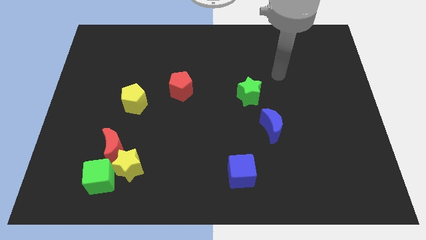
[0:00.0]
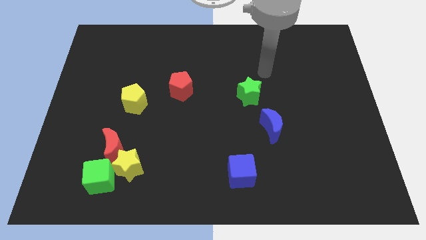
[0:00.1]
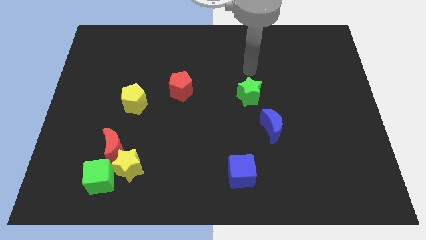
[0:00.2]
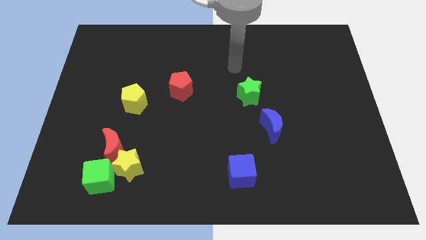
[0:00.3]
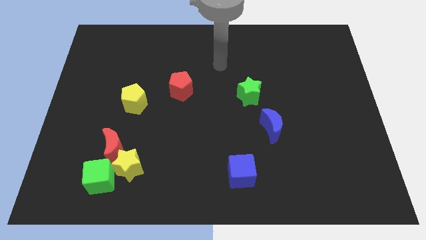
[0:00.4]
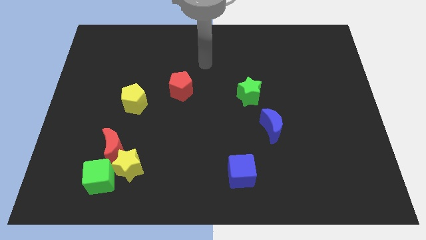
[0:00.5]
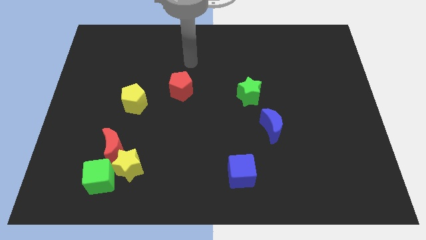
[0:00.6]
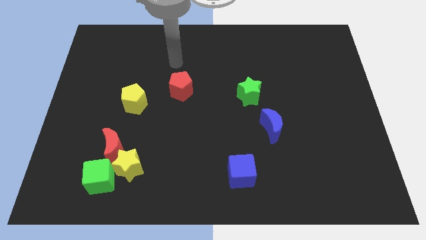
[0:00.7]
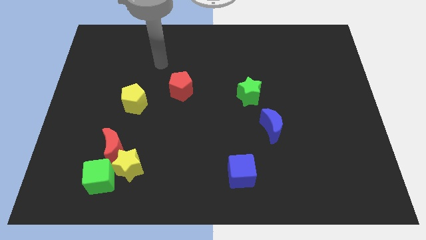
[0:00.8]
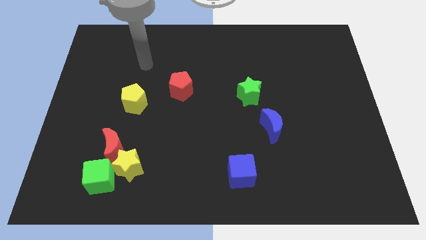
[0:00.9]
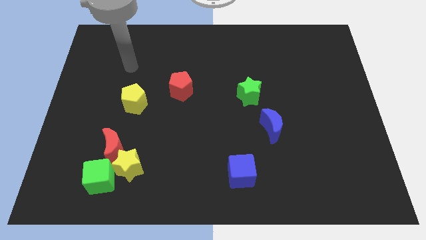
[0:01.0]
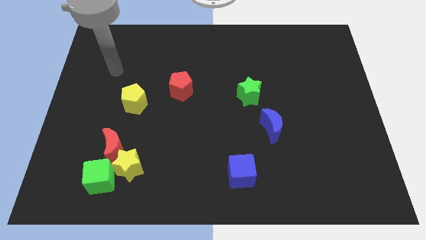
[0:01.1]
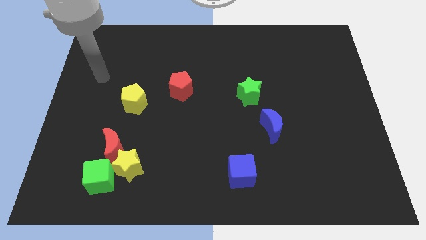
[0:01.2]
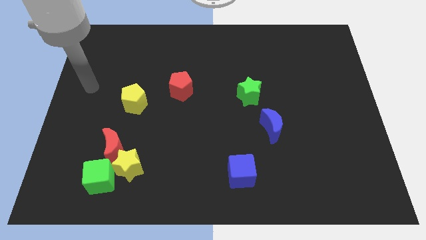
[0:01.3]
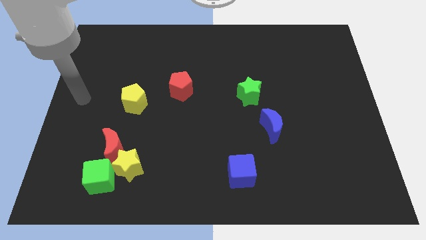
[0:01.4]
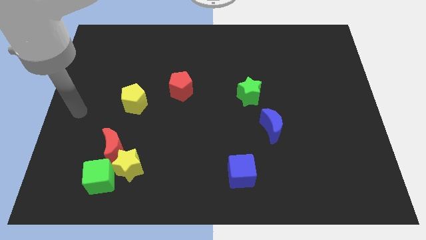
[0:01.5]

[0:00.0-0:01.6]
move the arm to the left of yellow pentagon

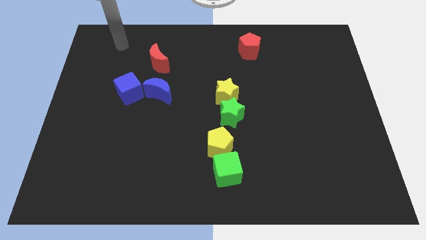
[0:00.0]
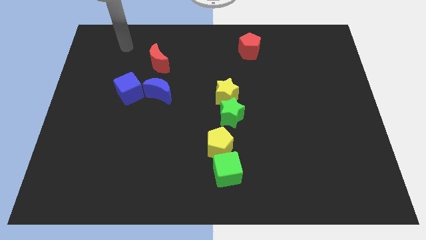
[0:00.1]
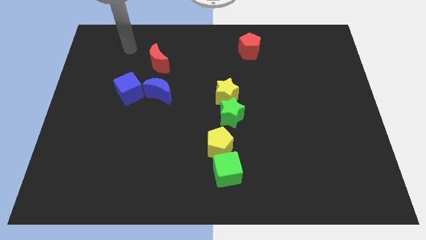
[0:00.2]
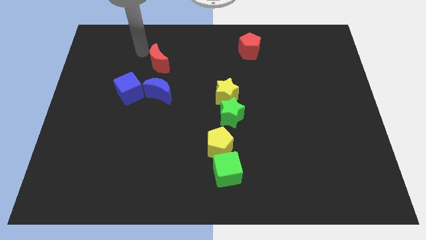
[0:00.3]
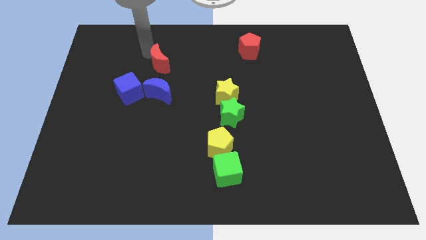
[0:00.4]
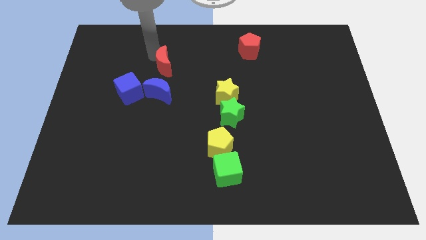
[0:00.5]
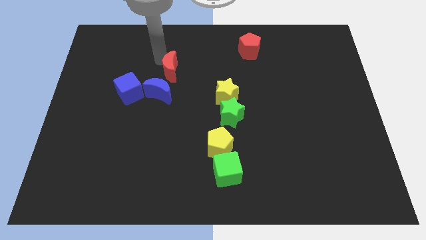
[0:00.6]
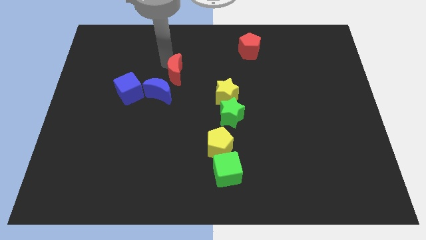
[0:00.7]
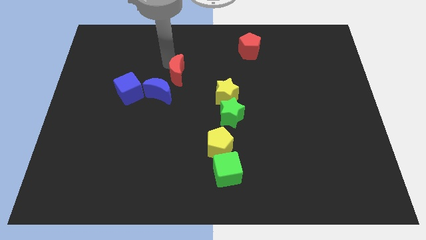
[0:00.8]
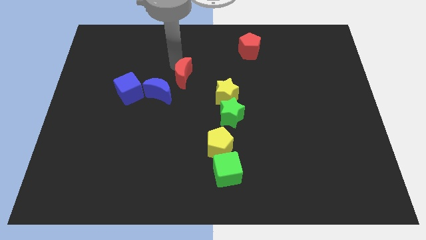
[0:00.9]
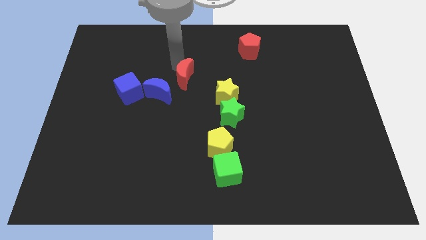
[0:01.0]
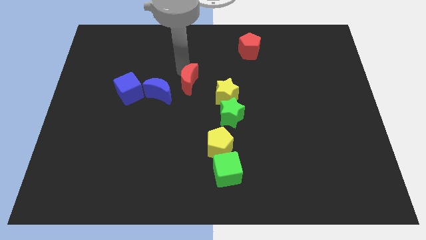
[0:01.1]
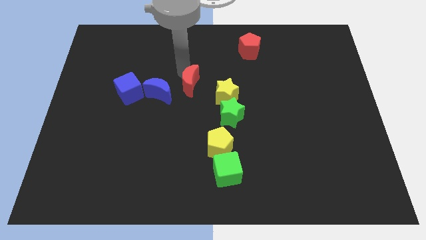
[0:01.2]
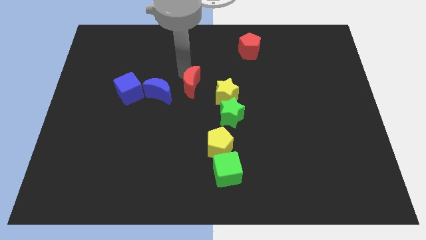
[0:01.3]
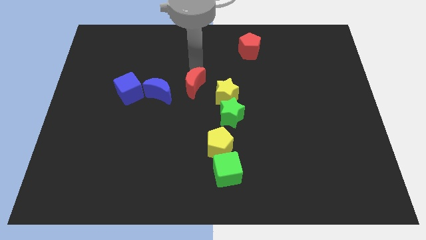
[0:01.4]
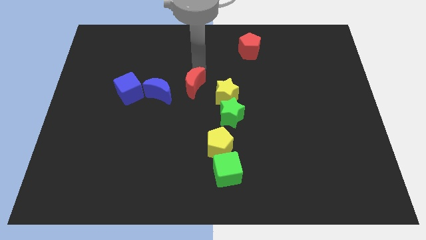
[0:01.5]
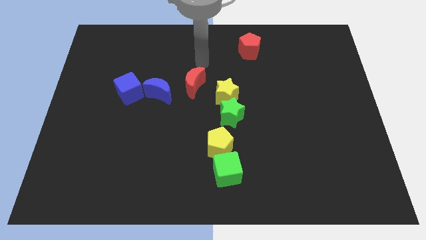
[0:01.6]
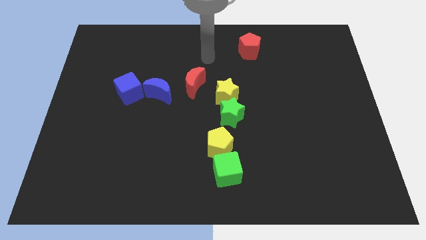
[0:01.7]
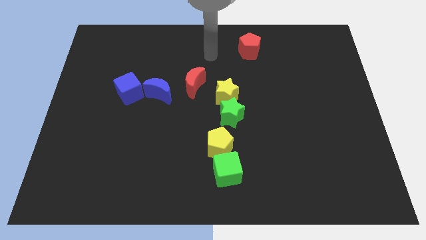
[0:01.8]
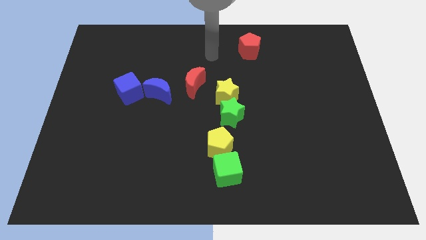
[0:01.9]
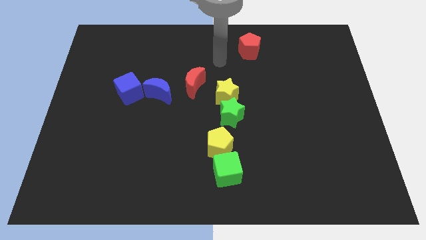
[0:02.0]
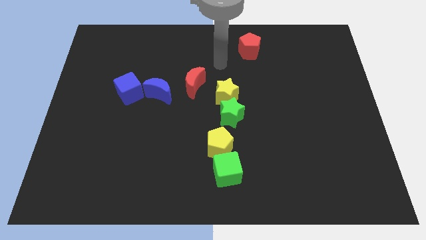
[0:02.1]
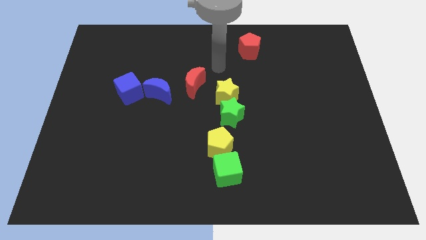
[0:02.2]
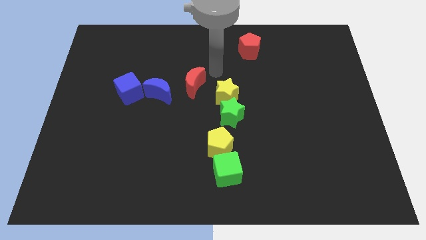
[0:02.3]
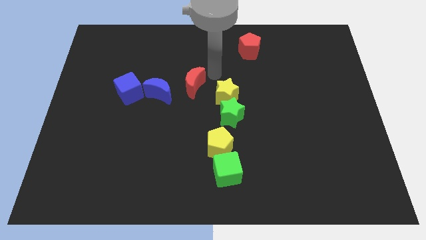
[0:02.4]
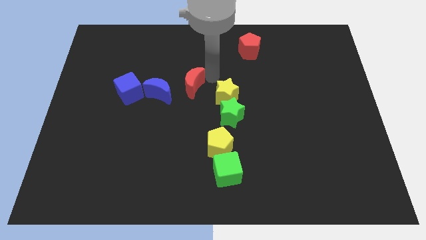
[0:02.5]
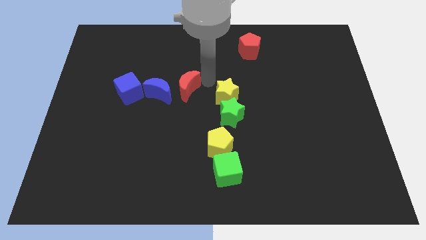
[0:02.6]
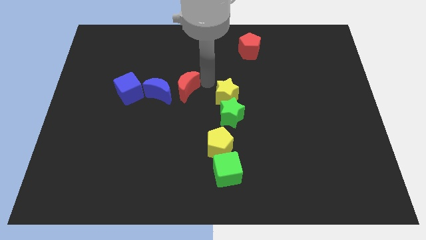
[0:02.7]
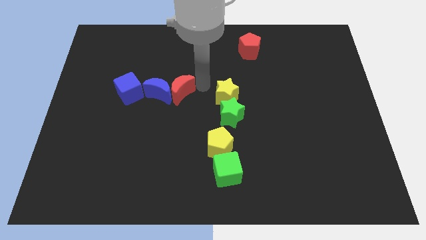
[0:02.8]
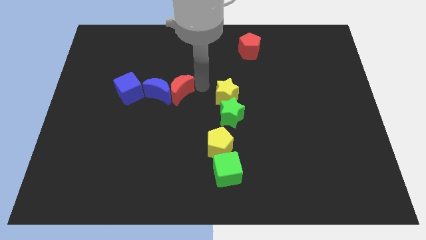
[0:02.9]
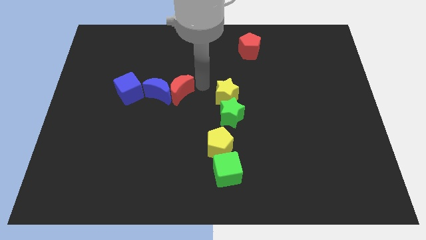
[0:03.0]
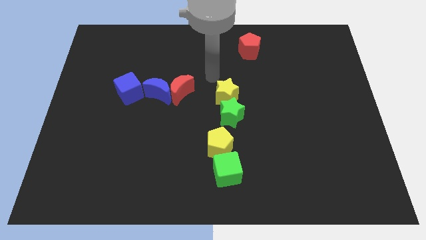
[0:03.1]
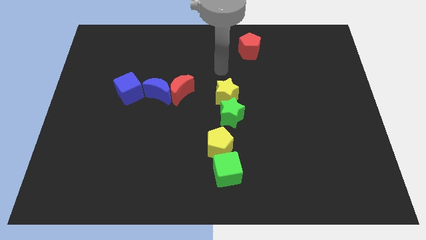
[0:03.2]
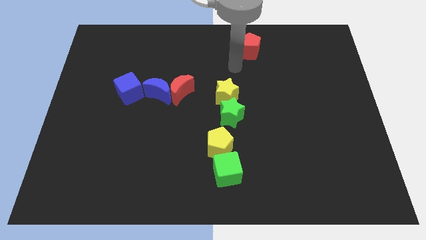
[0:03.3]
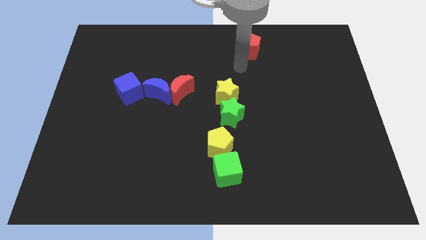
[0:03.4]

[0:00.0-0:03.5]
move the red moon to the left of the yellow star

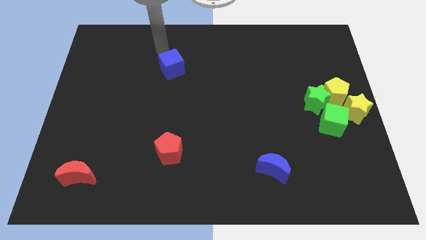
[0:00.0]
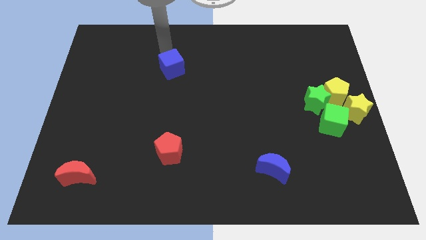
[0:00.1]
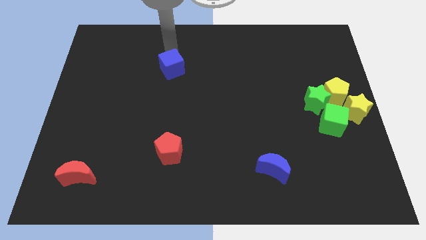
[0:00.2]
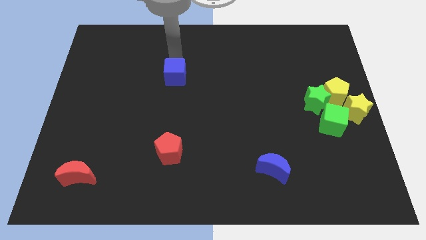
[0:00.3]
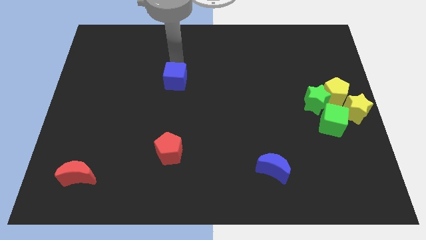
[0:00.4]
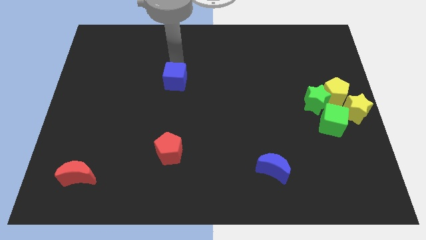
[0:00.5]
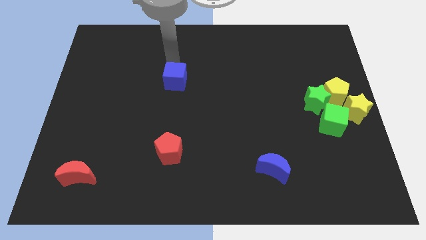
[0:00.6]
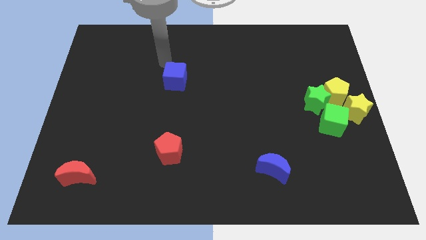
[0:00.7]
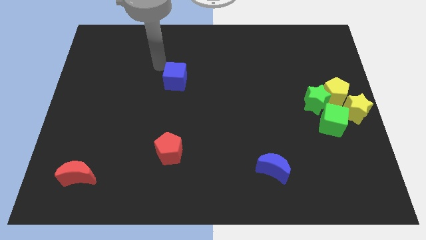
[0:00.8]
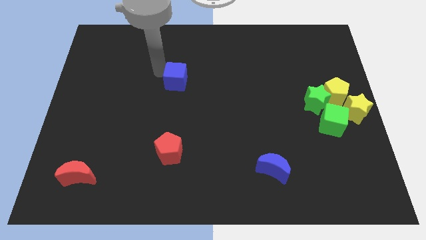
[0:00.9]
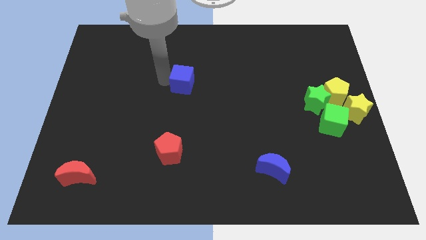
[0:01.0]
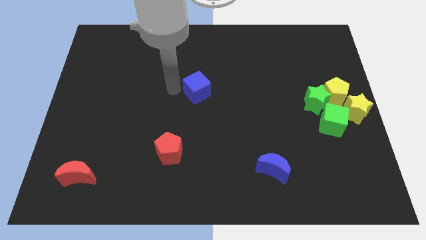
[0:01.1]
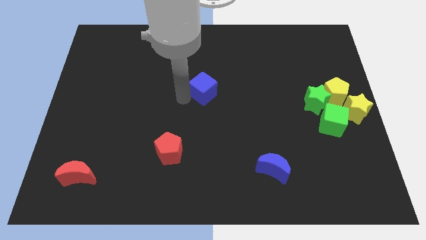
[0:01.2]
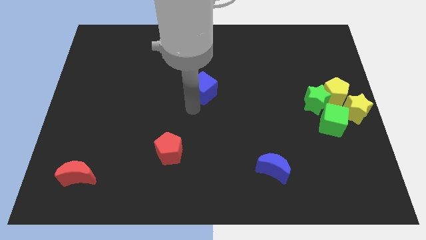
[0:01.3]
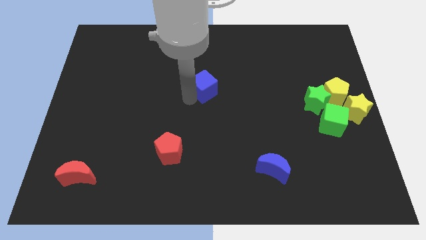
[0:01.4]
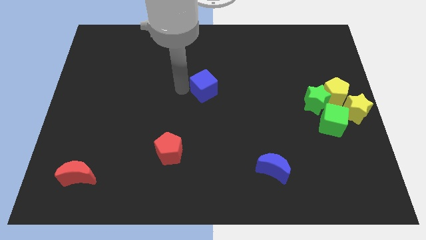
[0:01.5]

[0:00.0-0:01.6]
put blue cube to the center of the board

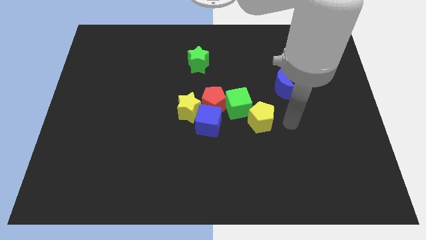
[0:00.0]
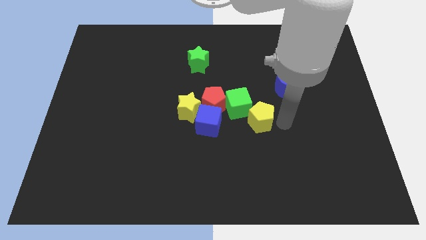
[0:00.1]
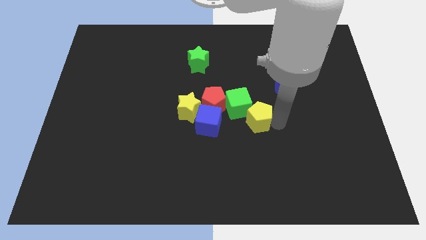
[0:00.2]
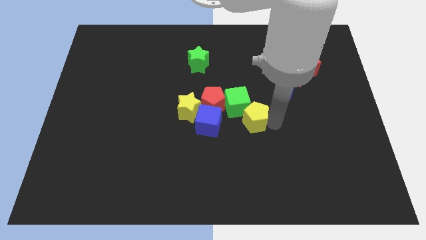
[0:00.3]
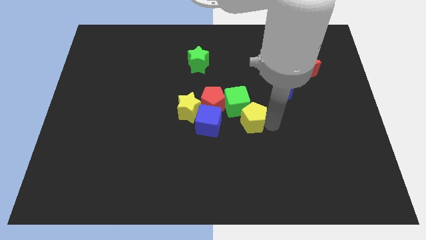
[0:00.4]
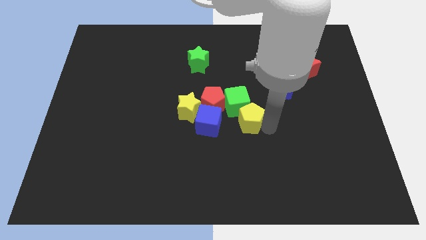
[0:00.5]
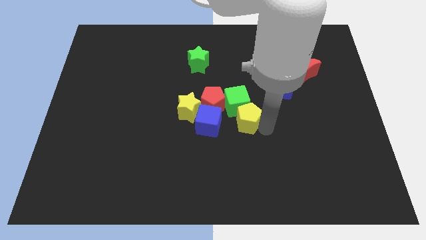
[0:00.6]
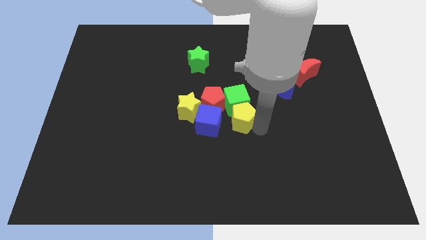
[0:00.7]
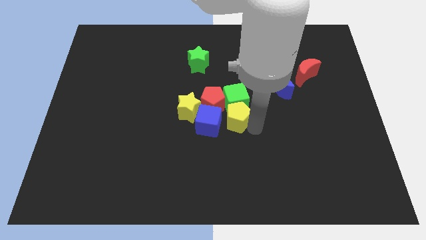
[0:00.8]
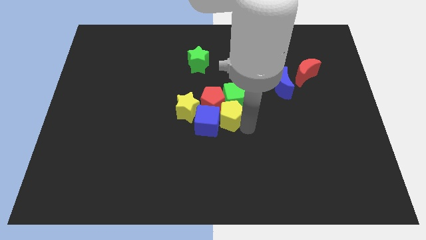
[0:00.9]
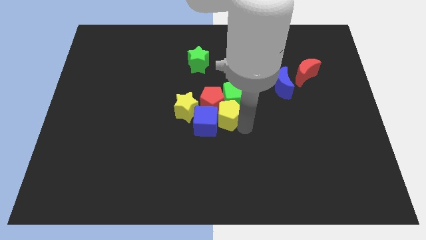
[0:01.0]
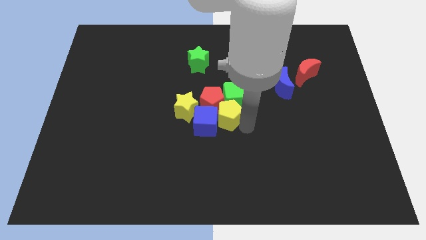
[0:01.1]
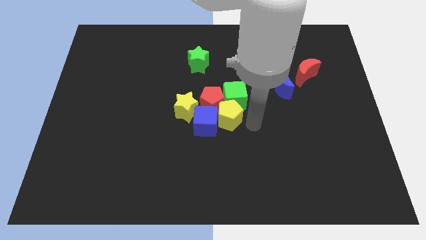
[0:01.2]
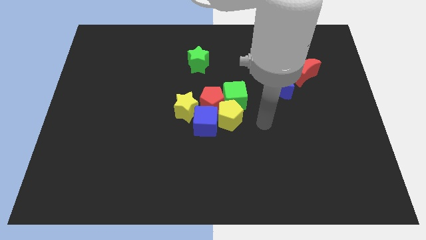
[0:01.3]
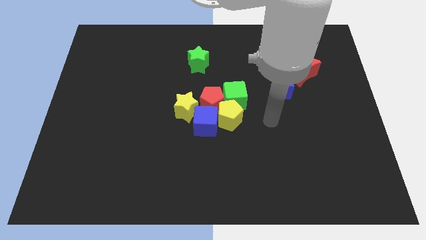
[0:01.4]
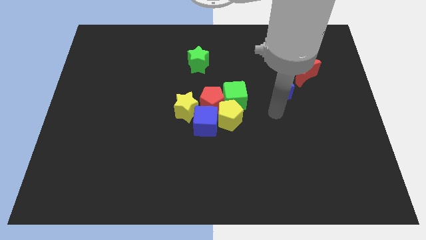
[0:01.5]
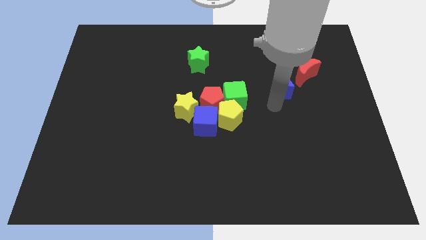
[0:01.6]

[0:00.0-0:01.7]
push the yellow pentagon into the blue cube

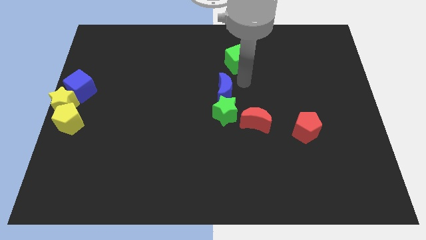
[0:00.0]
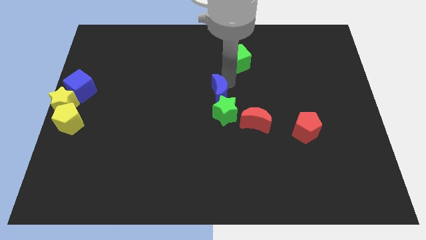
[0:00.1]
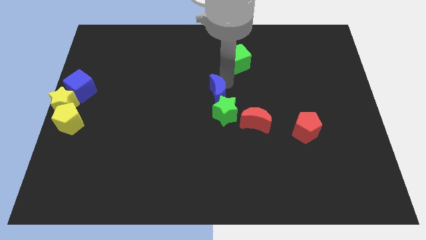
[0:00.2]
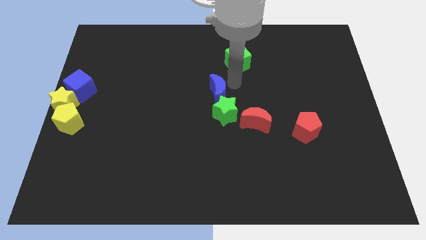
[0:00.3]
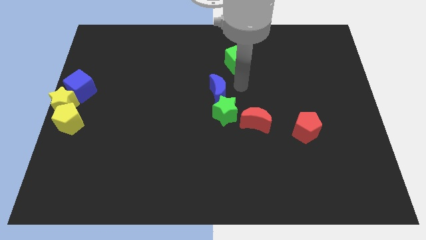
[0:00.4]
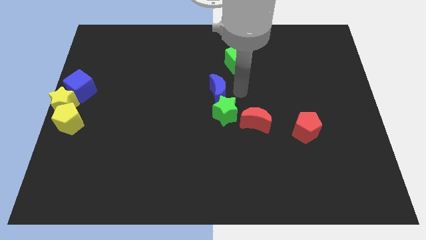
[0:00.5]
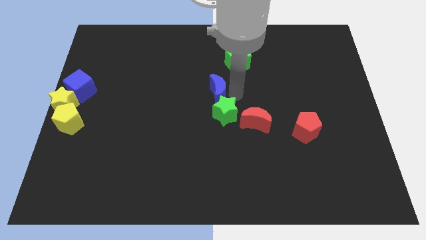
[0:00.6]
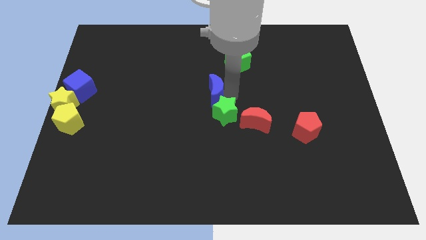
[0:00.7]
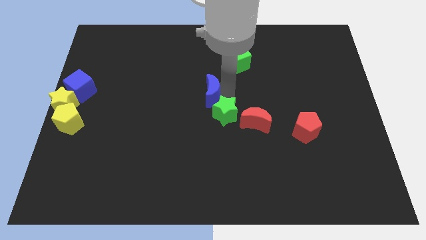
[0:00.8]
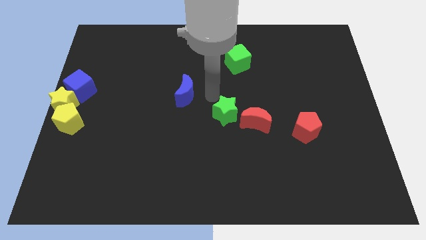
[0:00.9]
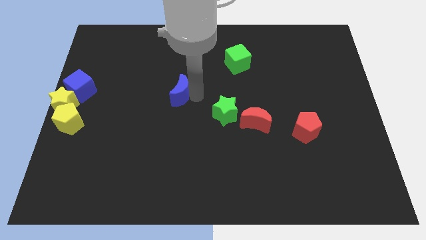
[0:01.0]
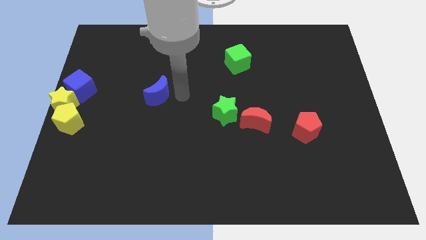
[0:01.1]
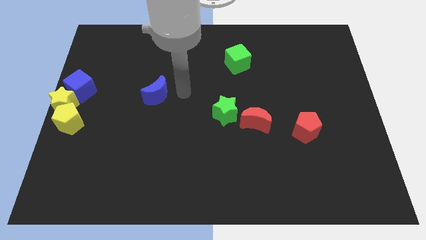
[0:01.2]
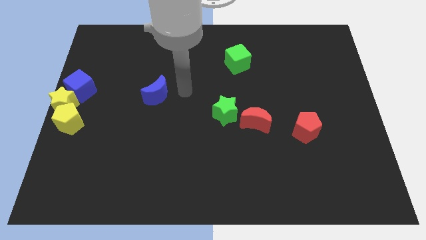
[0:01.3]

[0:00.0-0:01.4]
separate blue moon from the green star
